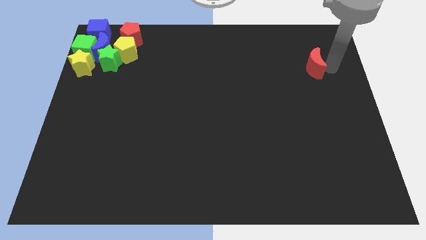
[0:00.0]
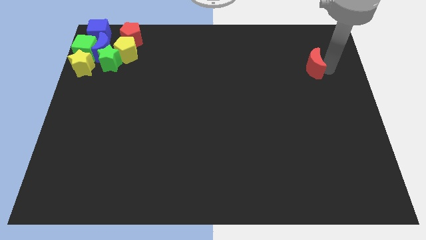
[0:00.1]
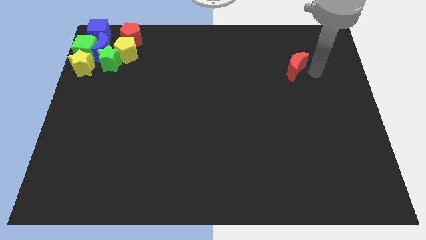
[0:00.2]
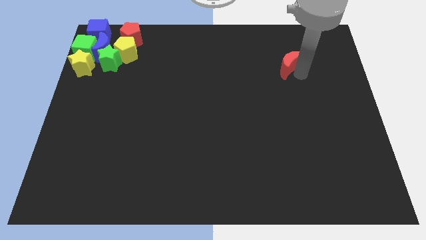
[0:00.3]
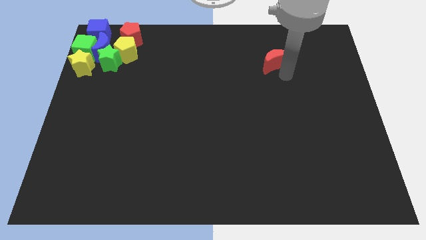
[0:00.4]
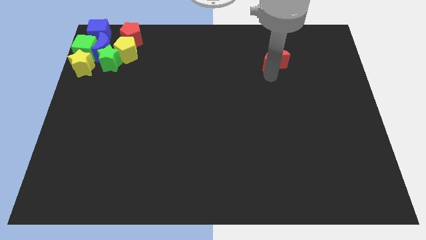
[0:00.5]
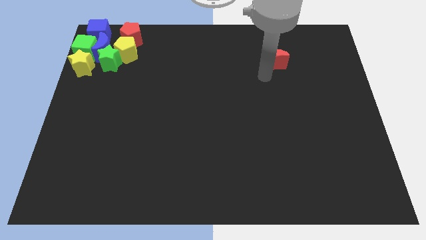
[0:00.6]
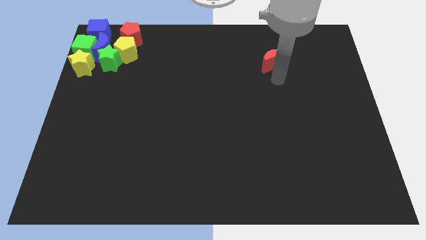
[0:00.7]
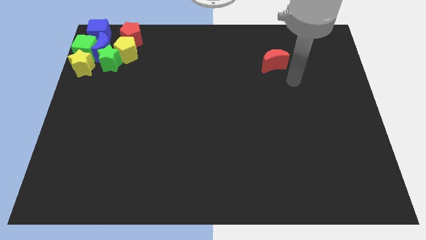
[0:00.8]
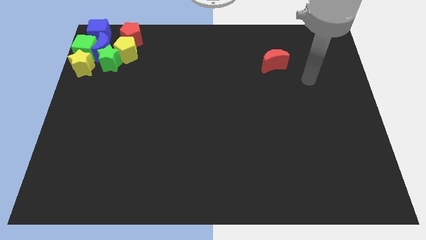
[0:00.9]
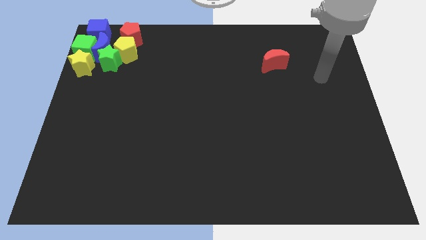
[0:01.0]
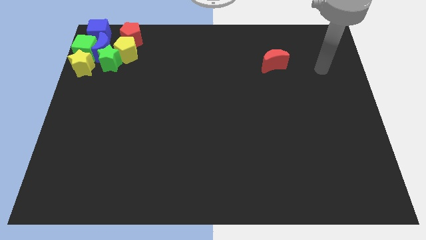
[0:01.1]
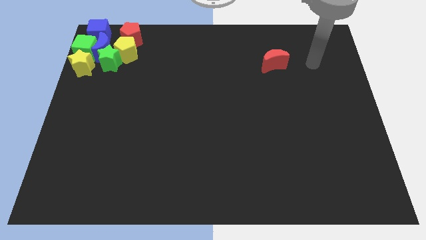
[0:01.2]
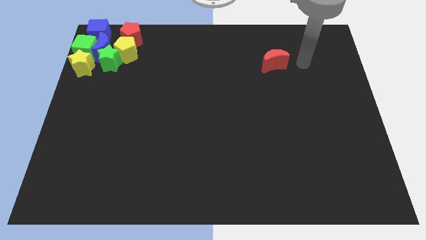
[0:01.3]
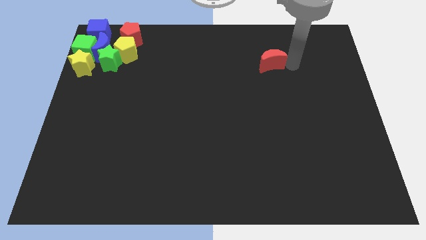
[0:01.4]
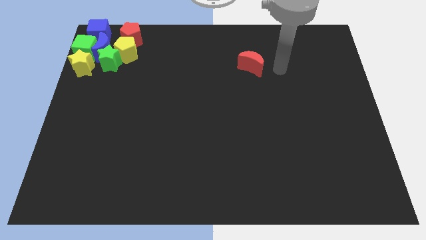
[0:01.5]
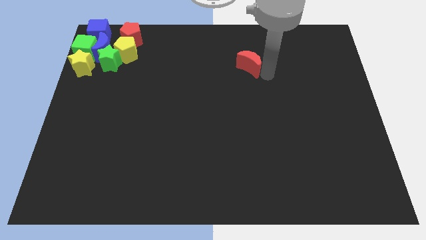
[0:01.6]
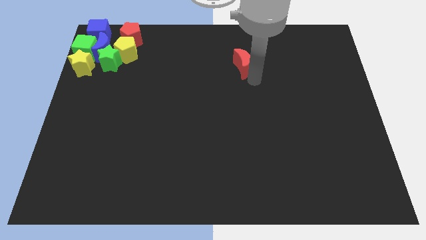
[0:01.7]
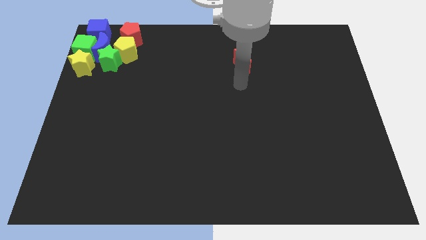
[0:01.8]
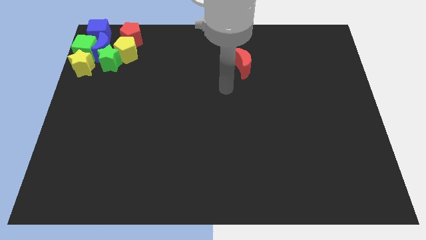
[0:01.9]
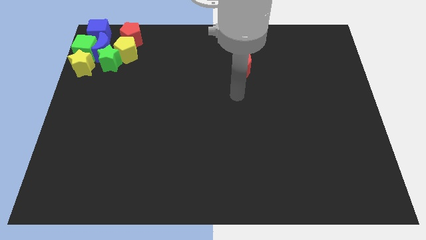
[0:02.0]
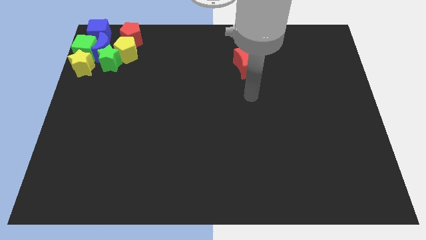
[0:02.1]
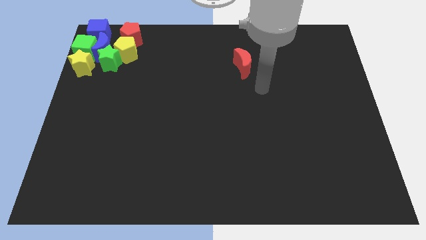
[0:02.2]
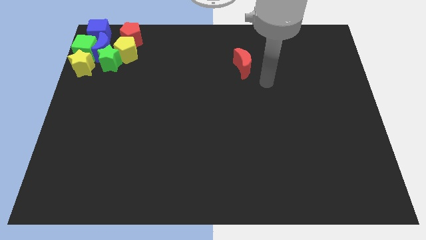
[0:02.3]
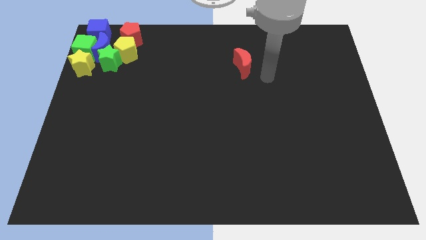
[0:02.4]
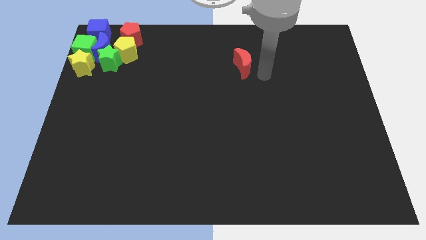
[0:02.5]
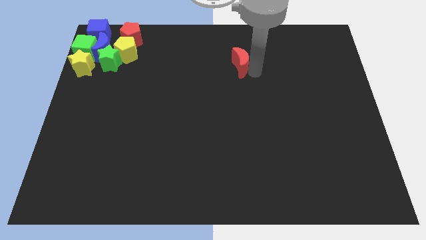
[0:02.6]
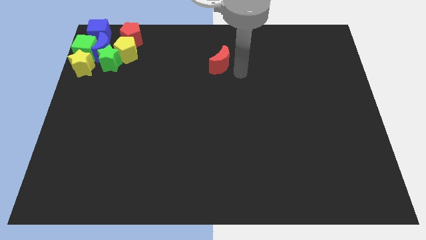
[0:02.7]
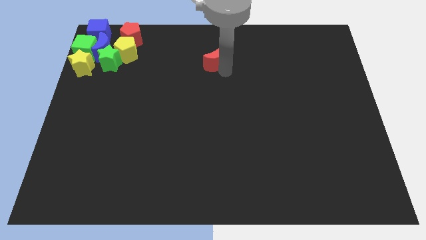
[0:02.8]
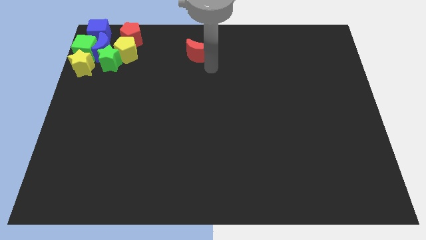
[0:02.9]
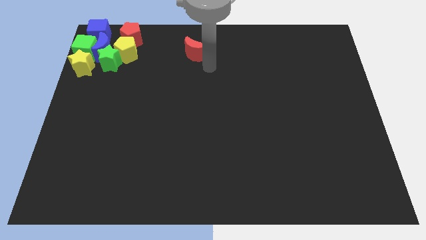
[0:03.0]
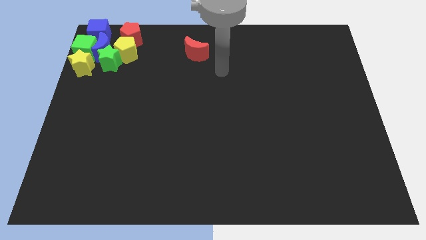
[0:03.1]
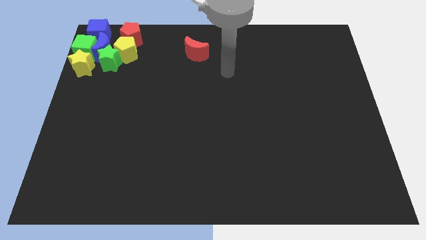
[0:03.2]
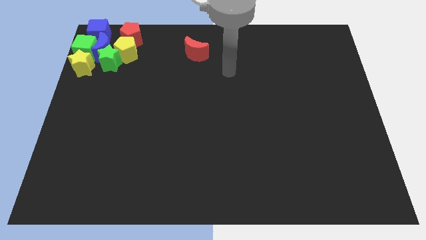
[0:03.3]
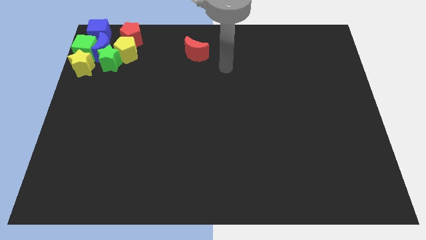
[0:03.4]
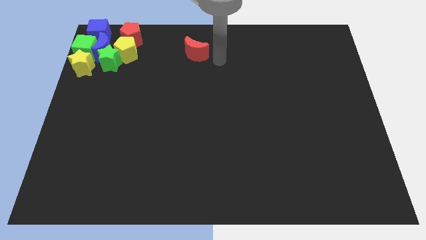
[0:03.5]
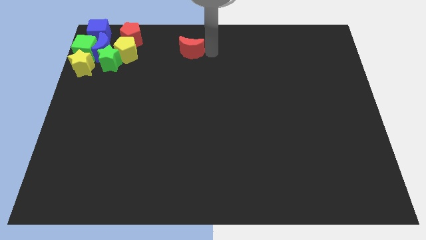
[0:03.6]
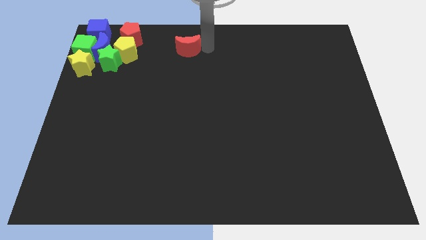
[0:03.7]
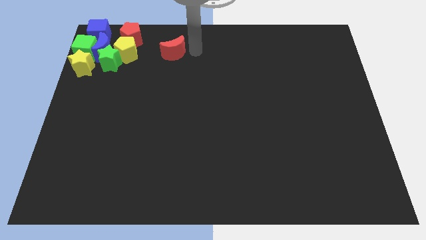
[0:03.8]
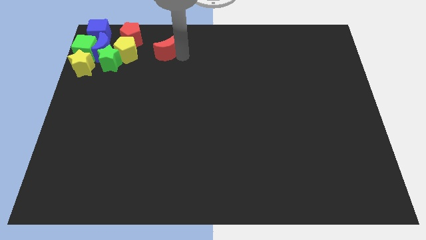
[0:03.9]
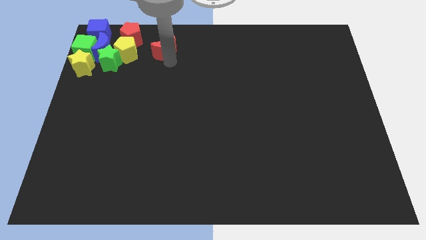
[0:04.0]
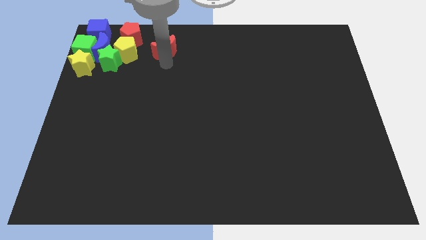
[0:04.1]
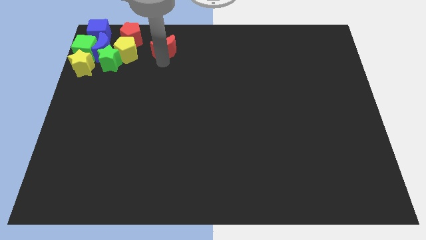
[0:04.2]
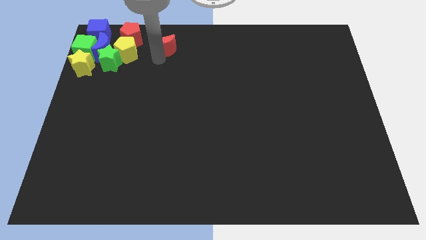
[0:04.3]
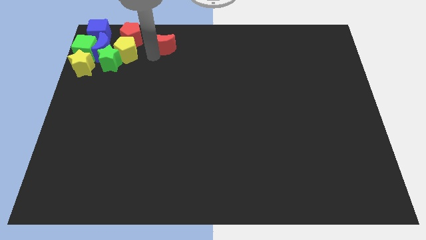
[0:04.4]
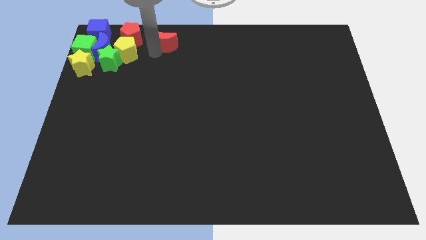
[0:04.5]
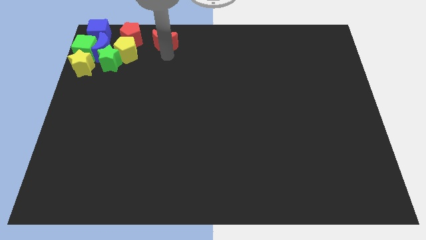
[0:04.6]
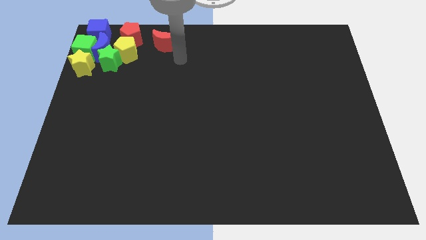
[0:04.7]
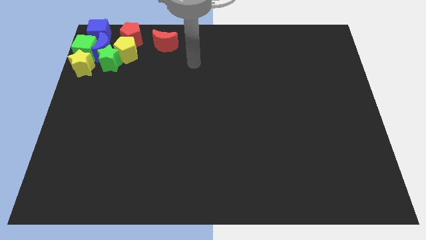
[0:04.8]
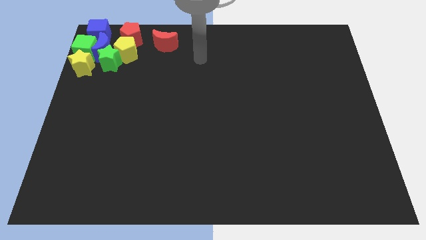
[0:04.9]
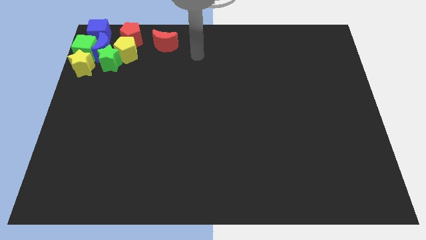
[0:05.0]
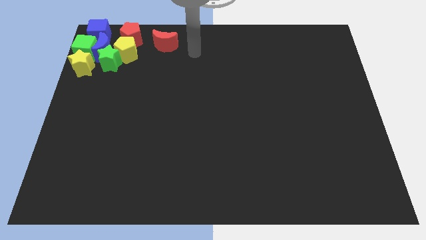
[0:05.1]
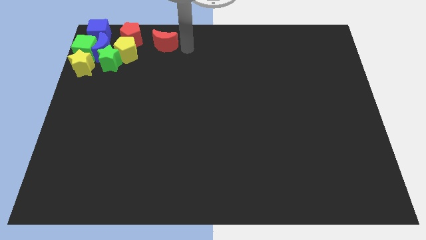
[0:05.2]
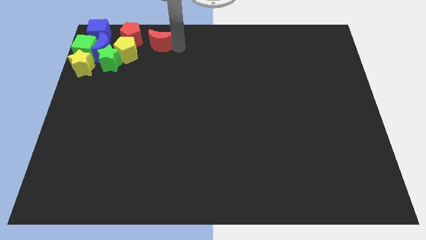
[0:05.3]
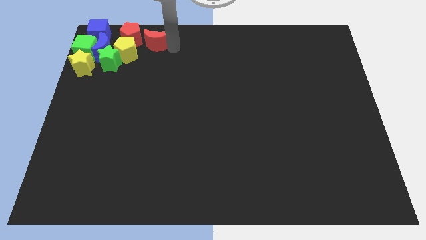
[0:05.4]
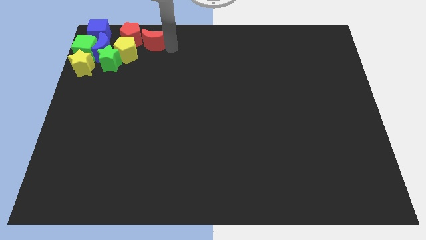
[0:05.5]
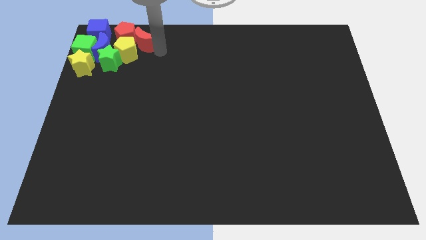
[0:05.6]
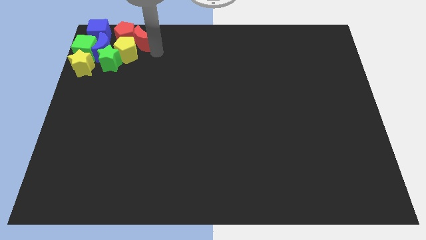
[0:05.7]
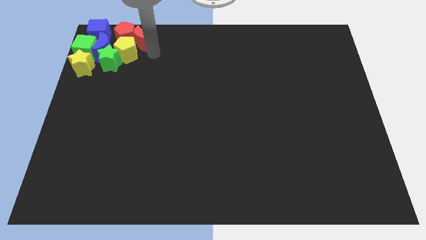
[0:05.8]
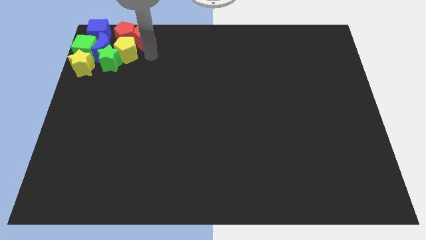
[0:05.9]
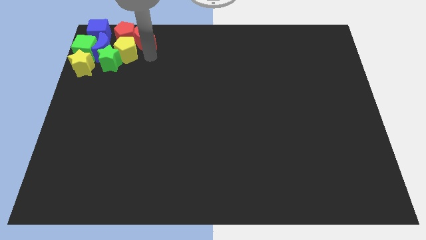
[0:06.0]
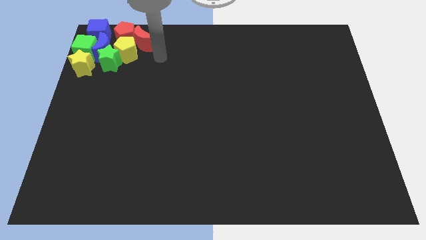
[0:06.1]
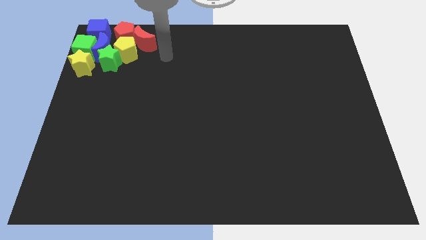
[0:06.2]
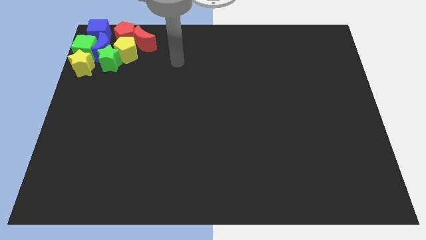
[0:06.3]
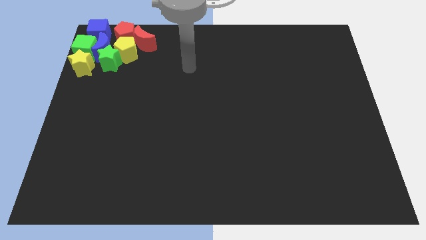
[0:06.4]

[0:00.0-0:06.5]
add red moon into group of blocks at the top left

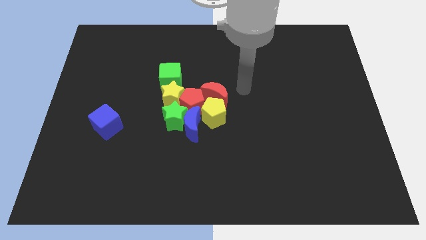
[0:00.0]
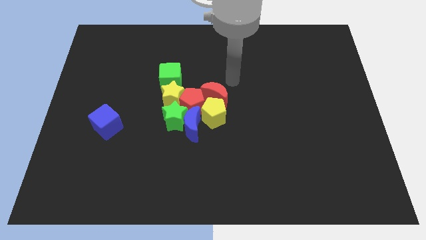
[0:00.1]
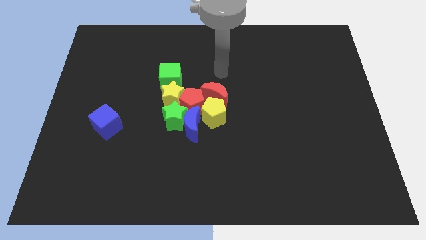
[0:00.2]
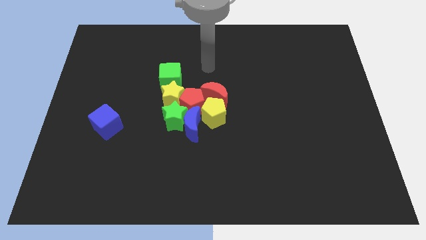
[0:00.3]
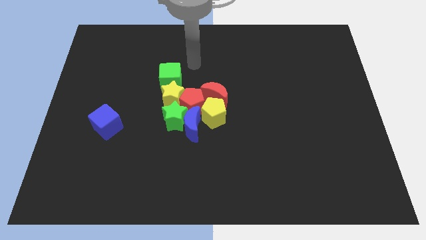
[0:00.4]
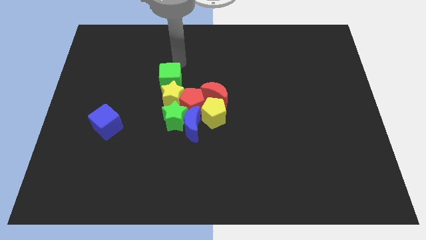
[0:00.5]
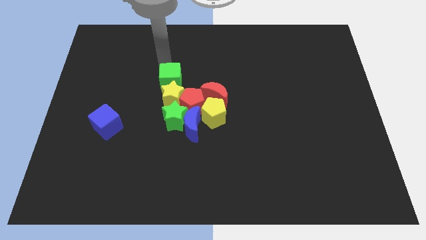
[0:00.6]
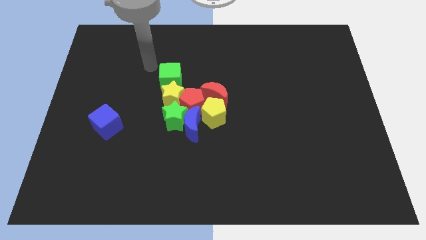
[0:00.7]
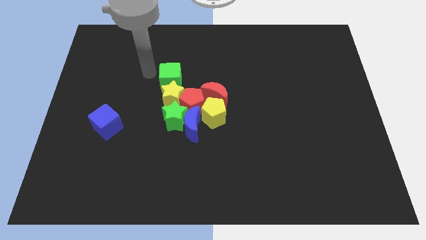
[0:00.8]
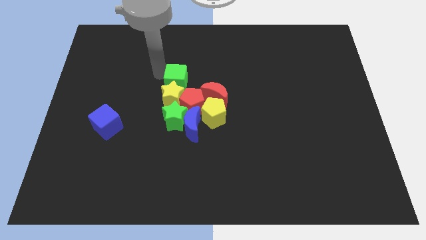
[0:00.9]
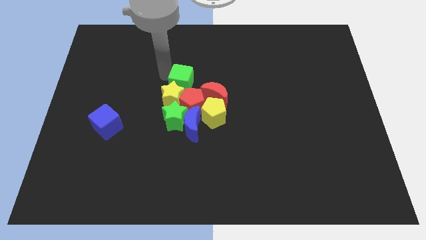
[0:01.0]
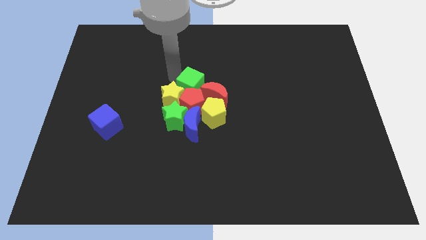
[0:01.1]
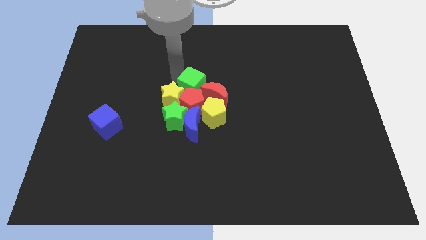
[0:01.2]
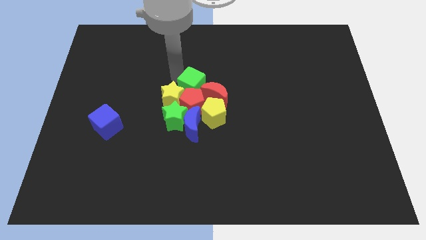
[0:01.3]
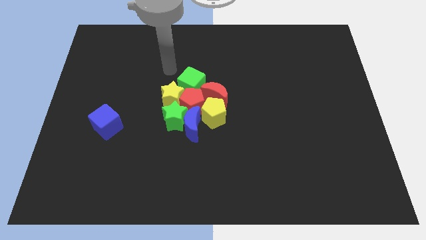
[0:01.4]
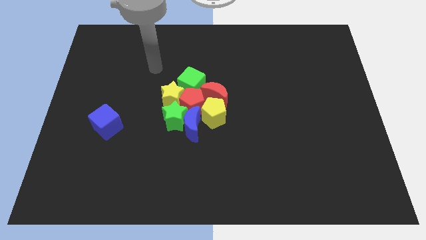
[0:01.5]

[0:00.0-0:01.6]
move the green cube above to the red pentagon

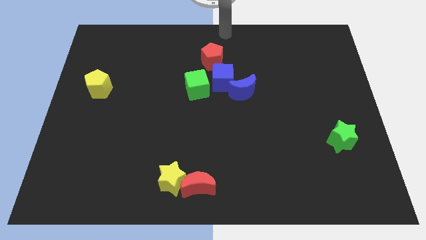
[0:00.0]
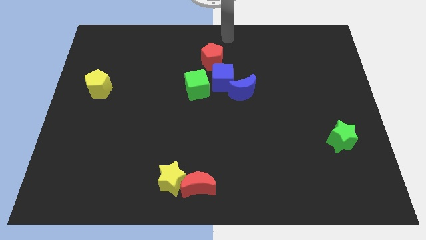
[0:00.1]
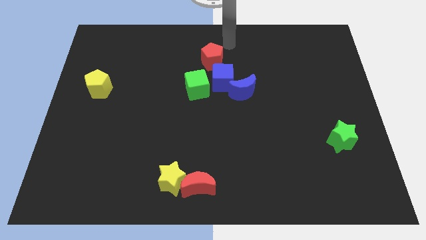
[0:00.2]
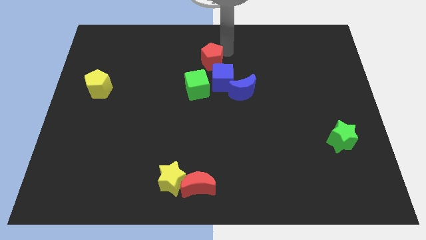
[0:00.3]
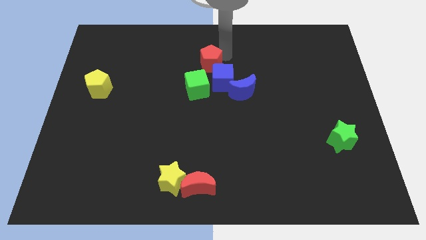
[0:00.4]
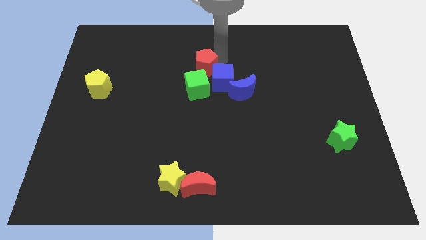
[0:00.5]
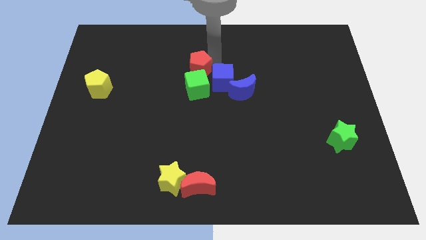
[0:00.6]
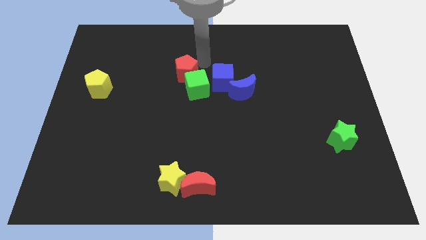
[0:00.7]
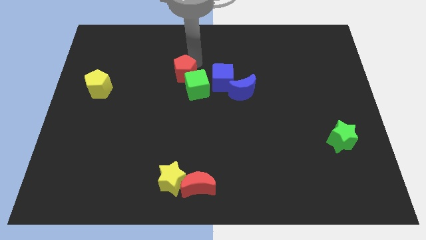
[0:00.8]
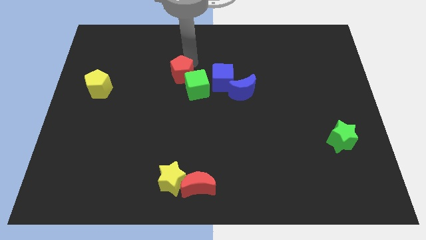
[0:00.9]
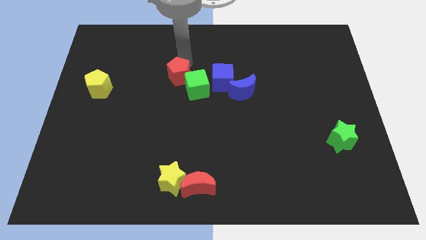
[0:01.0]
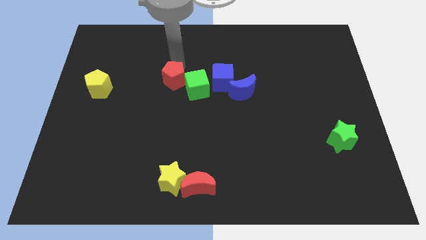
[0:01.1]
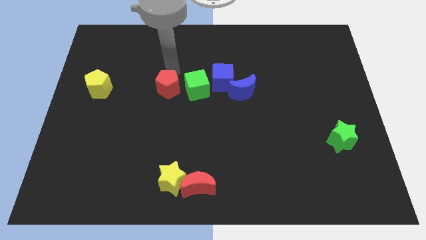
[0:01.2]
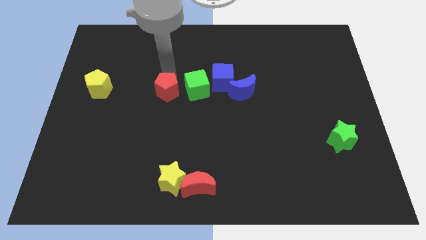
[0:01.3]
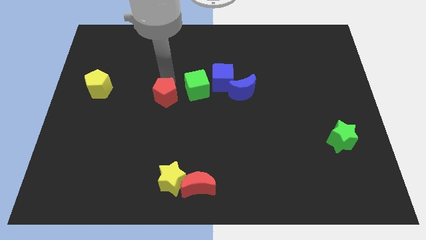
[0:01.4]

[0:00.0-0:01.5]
slide the red pentagon to the left side of the green cube
